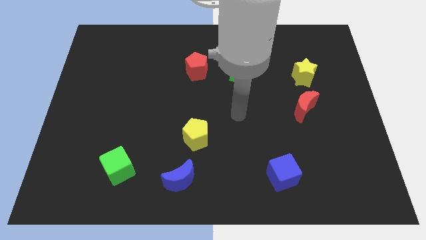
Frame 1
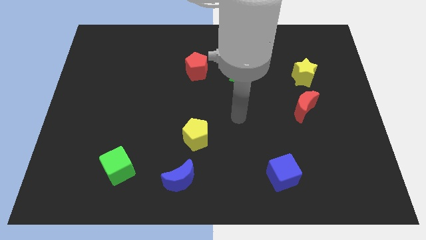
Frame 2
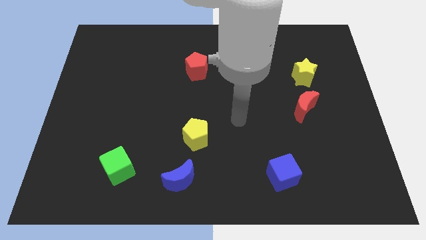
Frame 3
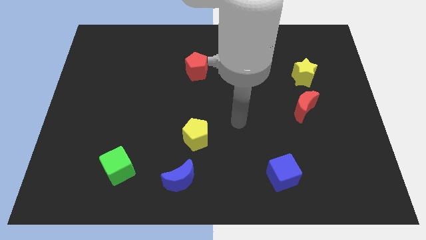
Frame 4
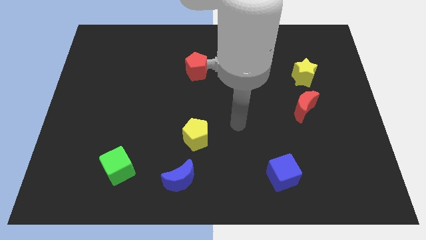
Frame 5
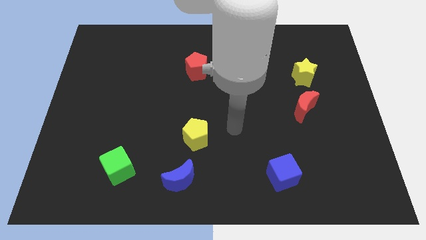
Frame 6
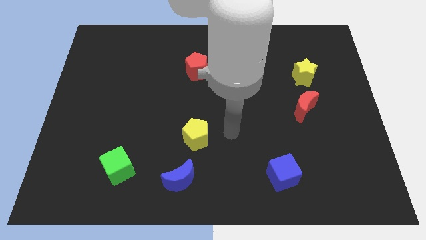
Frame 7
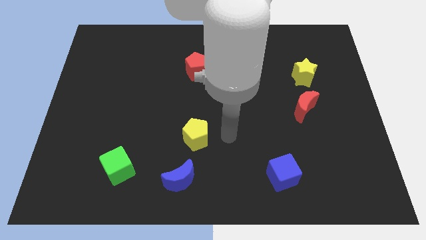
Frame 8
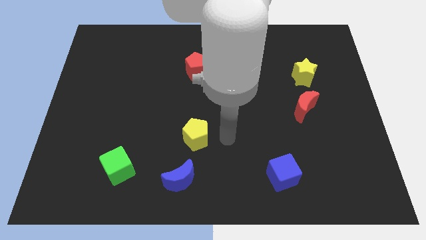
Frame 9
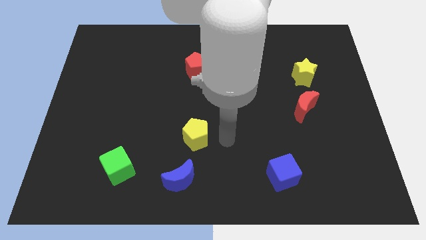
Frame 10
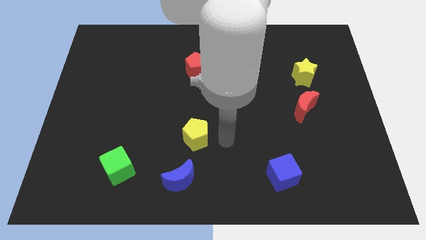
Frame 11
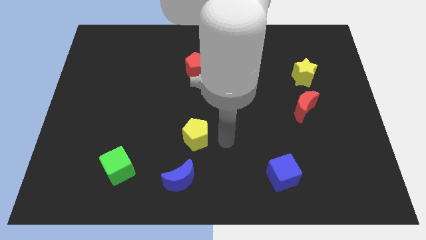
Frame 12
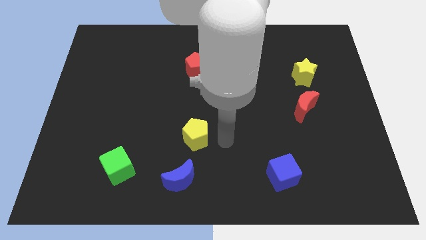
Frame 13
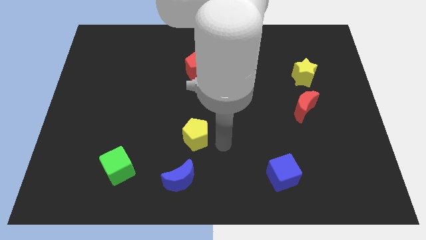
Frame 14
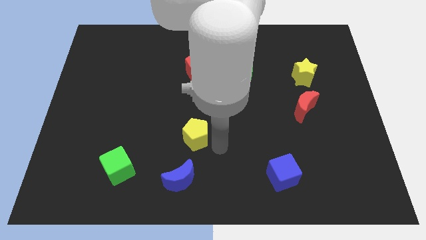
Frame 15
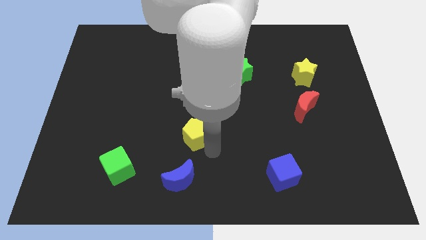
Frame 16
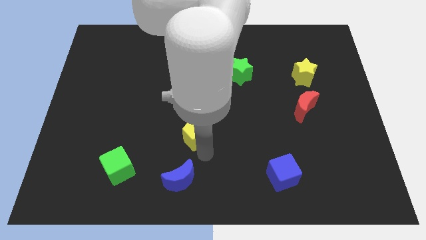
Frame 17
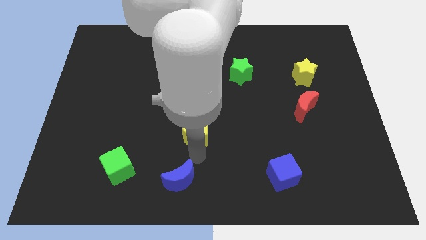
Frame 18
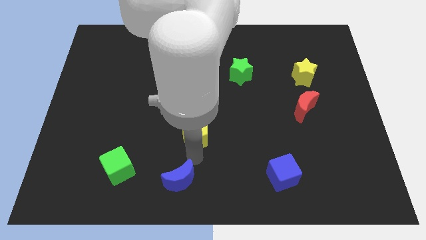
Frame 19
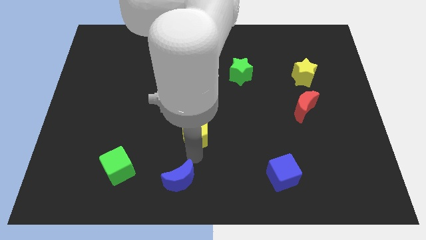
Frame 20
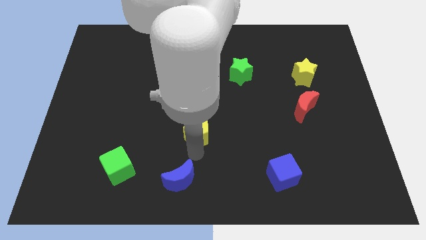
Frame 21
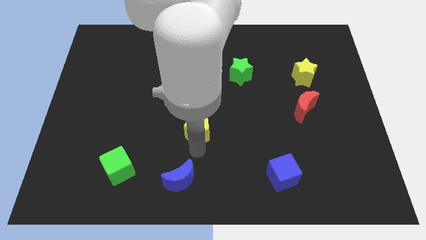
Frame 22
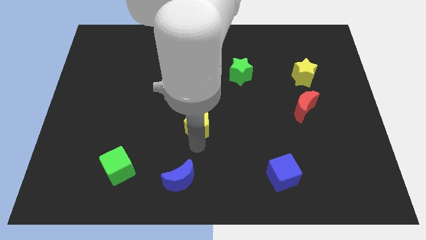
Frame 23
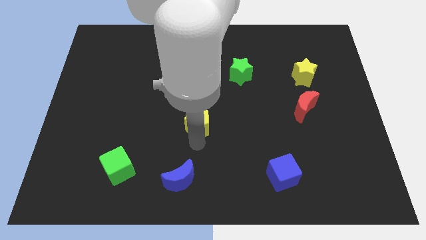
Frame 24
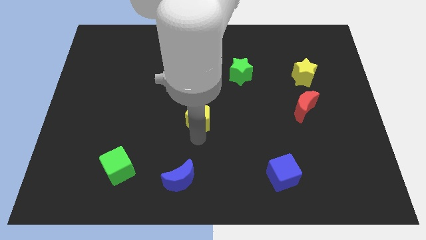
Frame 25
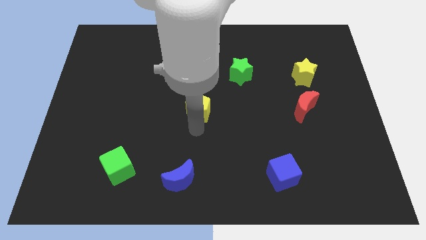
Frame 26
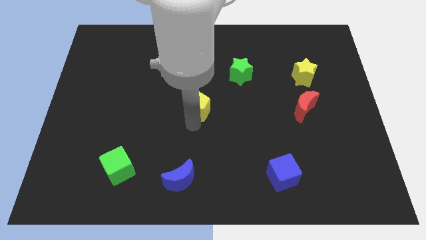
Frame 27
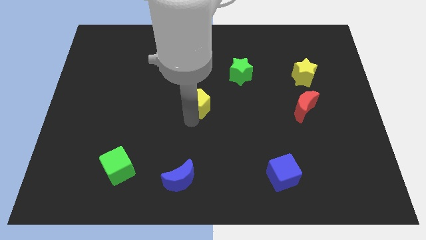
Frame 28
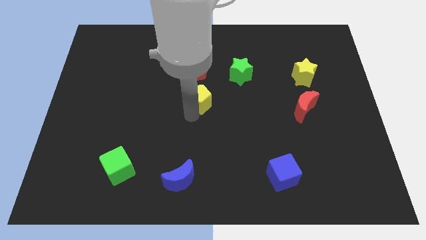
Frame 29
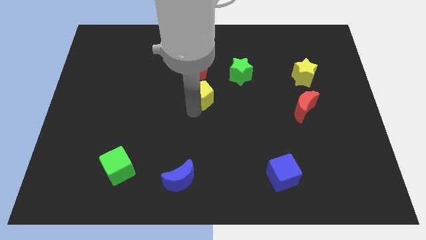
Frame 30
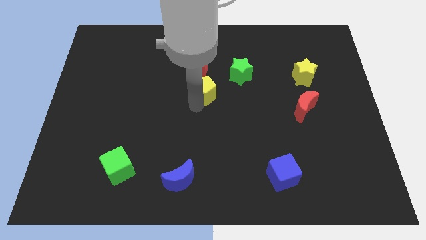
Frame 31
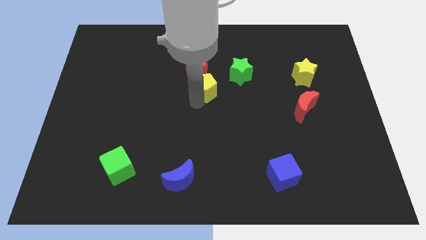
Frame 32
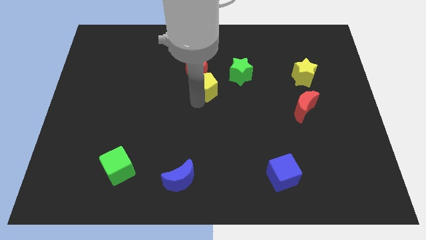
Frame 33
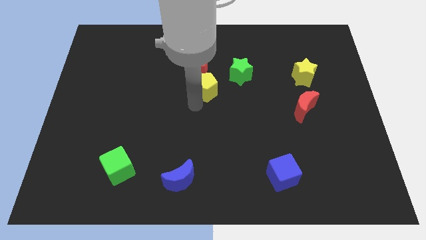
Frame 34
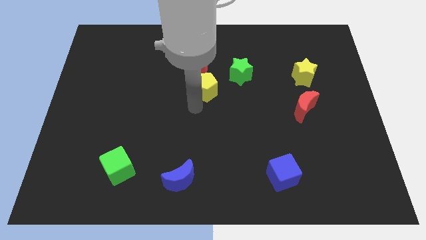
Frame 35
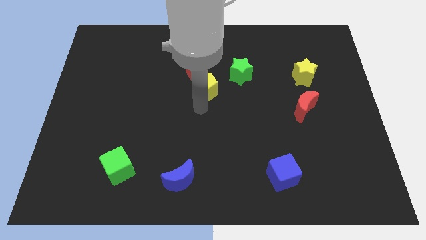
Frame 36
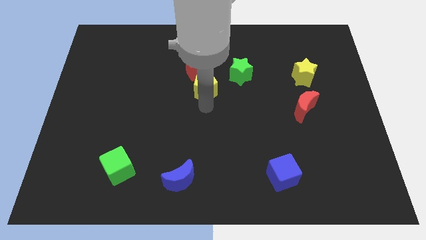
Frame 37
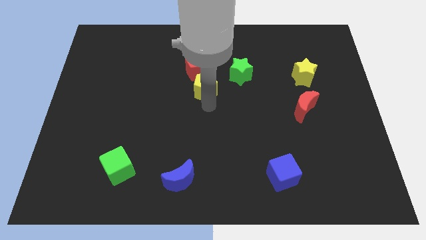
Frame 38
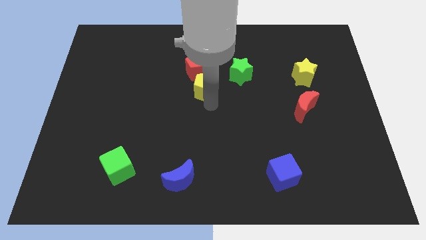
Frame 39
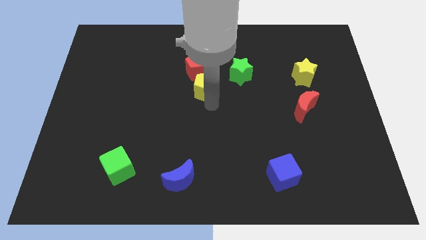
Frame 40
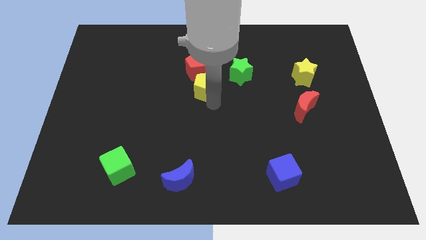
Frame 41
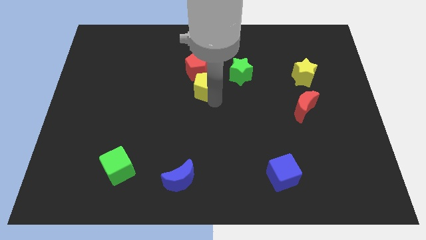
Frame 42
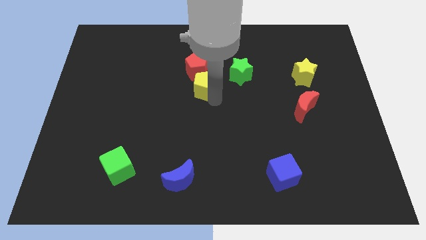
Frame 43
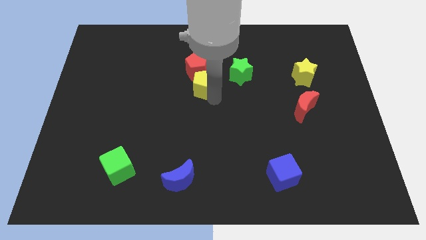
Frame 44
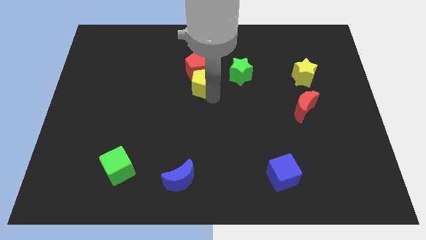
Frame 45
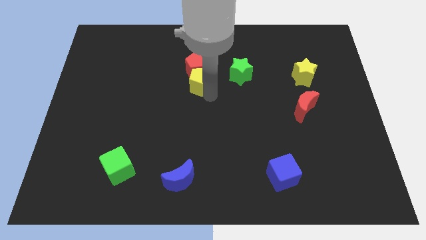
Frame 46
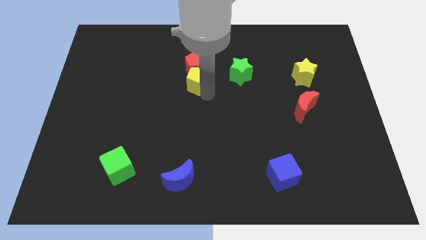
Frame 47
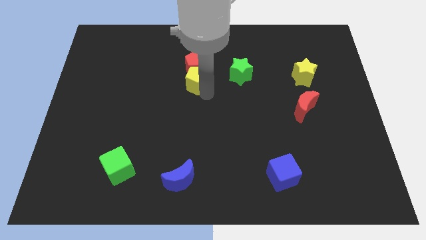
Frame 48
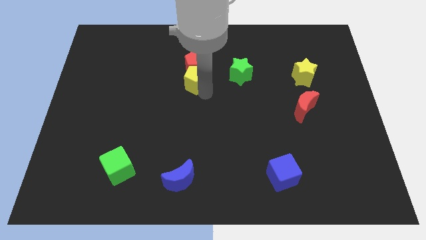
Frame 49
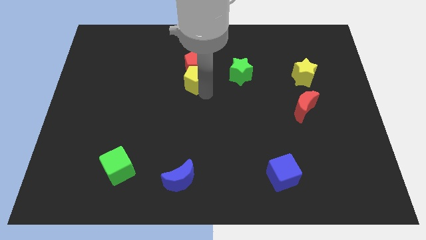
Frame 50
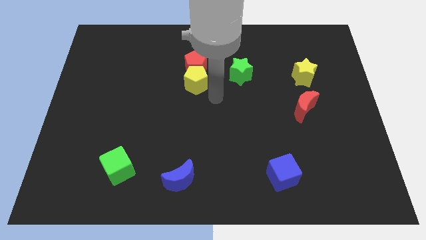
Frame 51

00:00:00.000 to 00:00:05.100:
slide the yellow pentagon vertically below the red pentagon

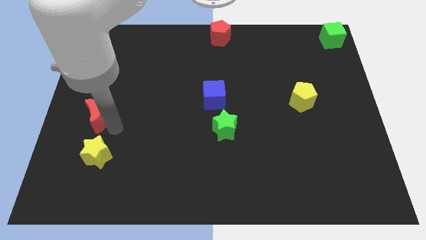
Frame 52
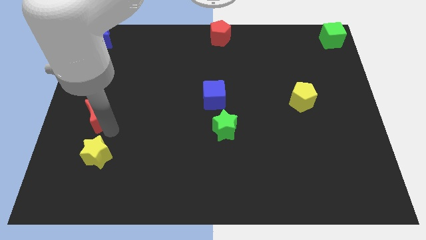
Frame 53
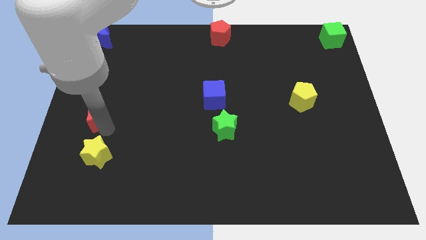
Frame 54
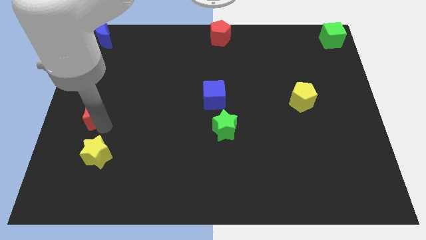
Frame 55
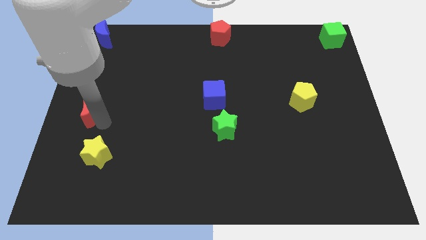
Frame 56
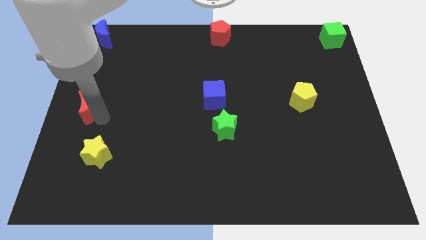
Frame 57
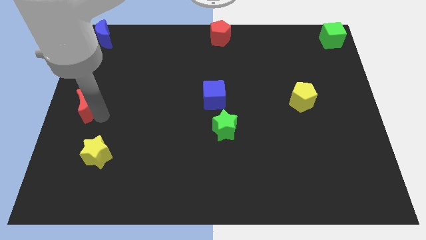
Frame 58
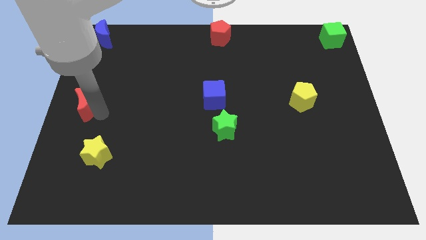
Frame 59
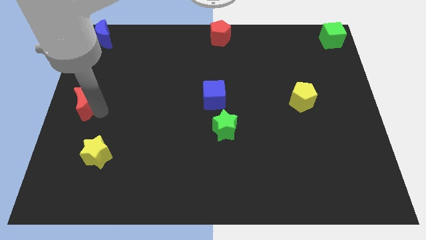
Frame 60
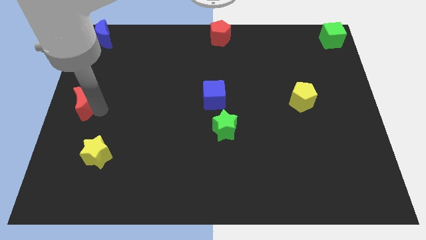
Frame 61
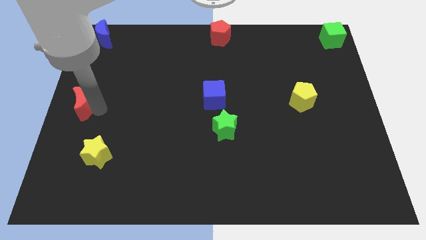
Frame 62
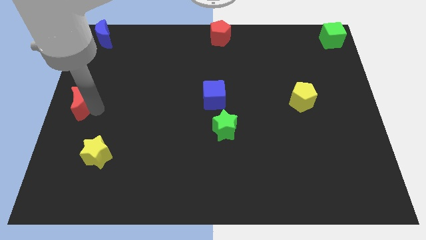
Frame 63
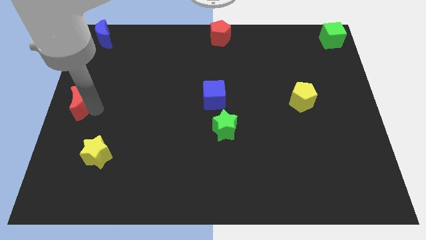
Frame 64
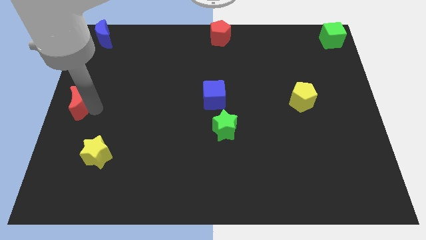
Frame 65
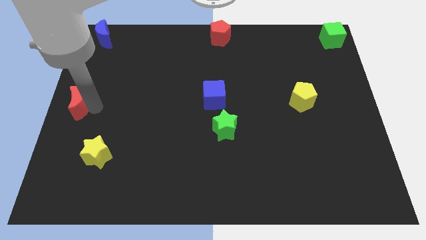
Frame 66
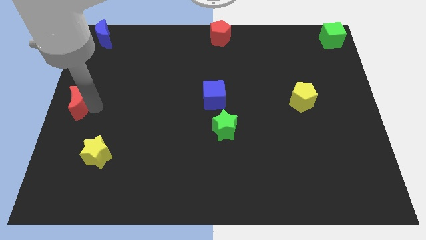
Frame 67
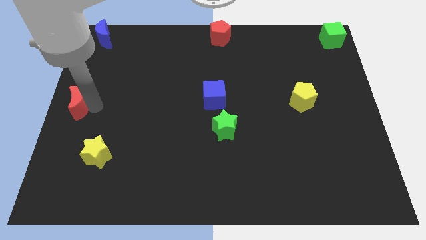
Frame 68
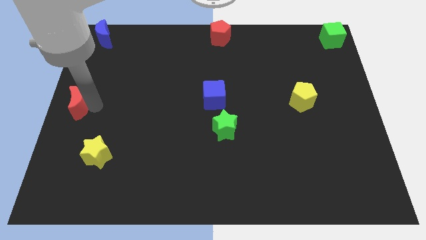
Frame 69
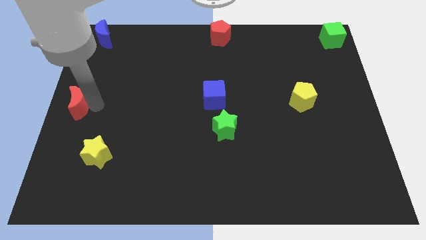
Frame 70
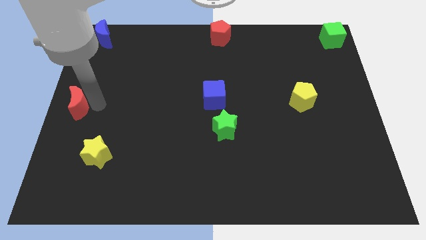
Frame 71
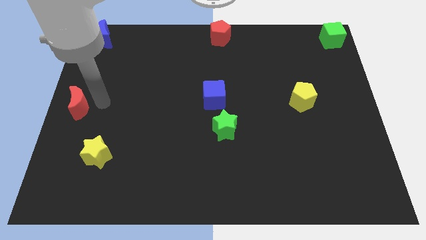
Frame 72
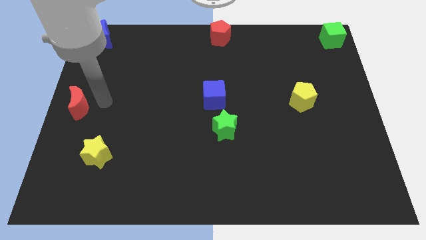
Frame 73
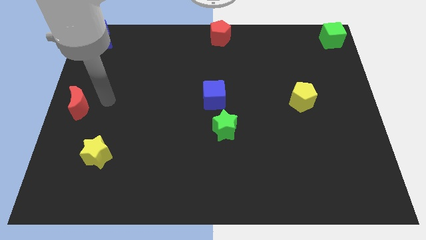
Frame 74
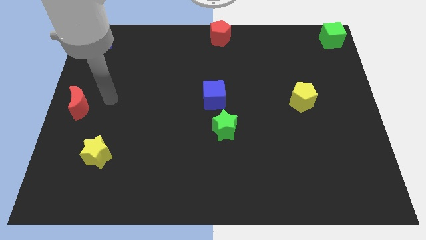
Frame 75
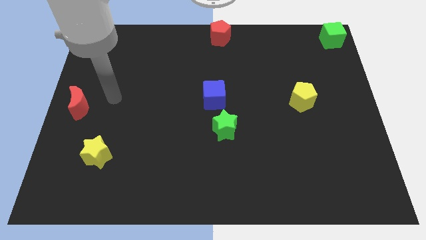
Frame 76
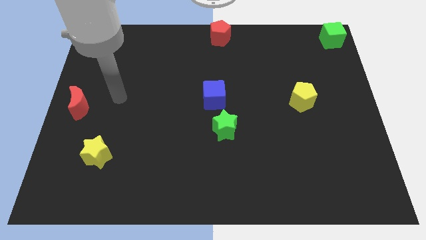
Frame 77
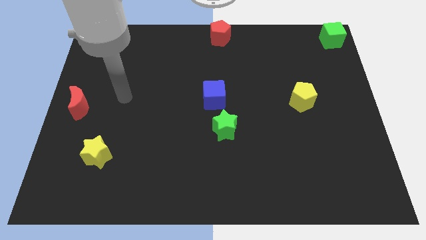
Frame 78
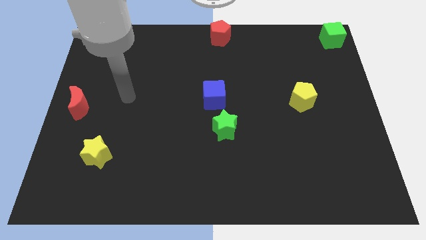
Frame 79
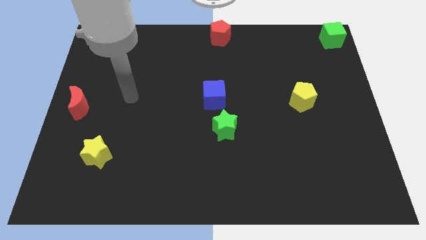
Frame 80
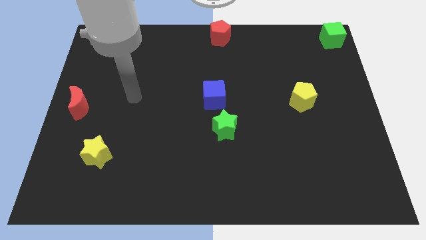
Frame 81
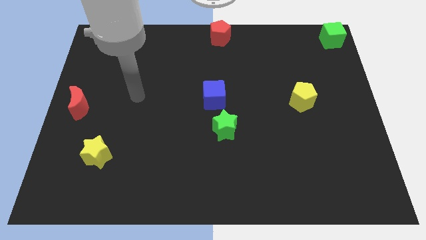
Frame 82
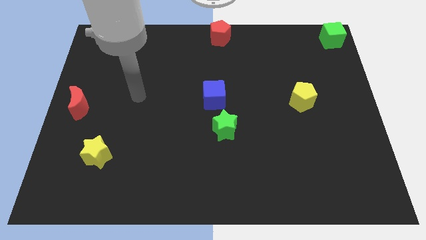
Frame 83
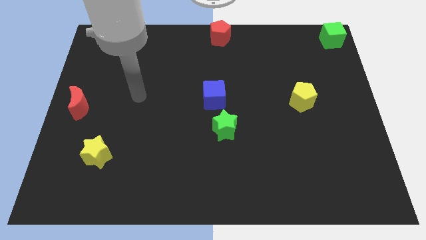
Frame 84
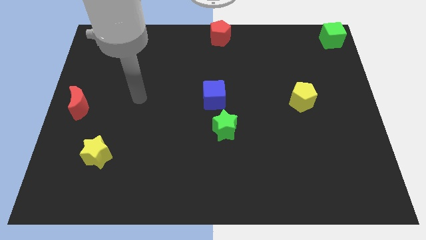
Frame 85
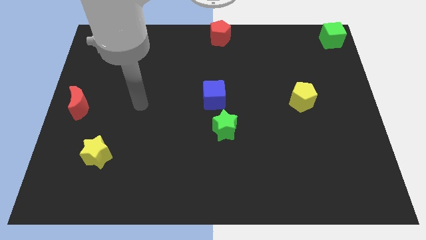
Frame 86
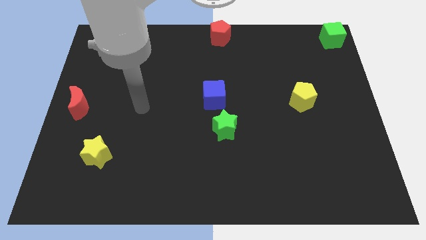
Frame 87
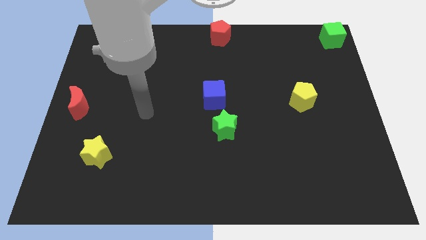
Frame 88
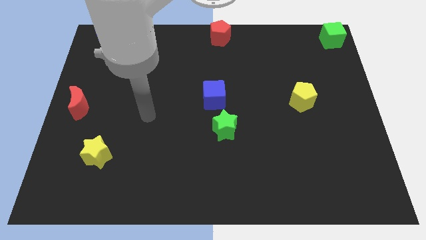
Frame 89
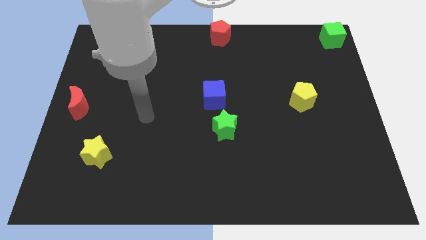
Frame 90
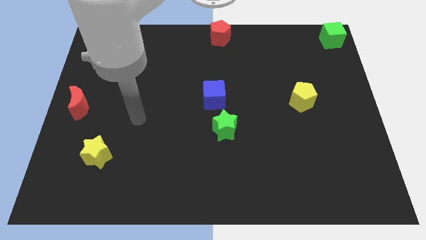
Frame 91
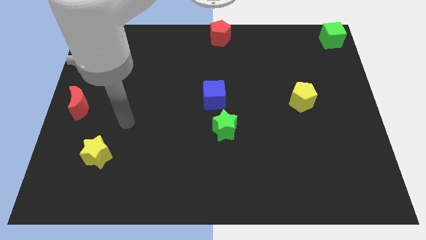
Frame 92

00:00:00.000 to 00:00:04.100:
move the red moon to the middle left of the board
